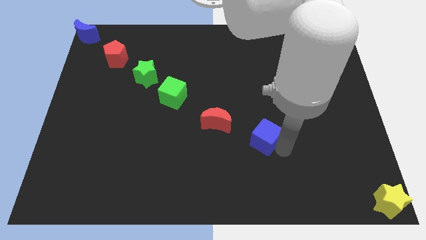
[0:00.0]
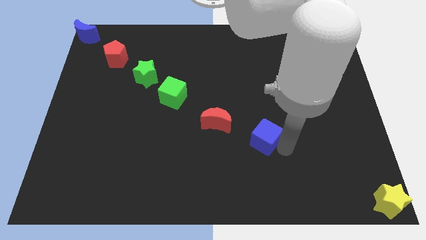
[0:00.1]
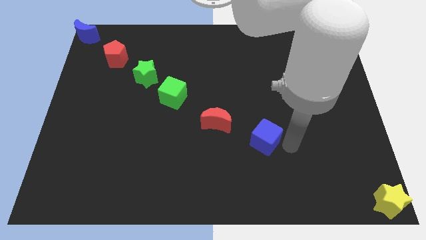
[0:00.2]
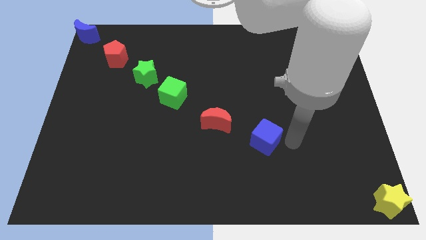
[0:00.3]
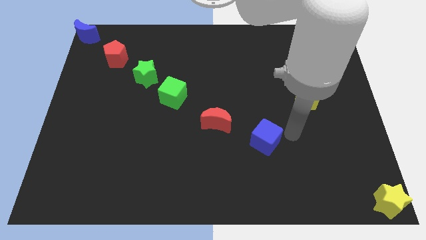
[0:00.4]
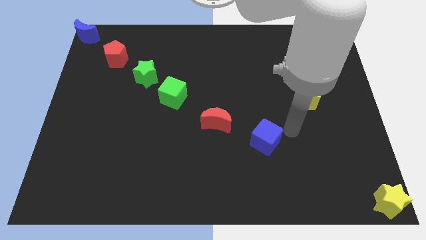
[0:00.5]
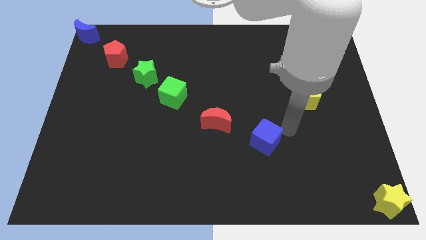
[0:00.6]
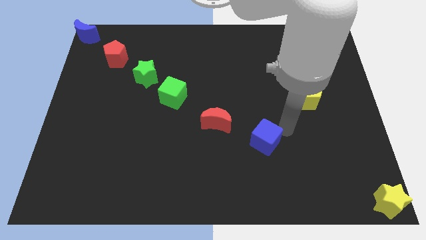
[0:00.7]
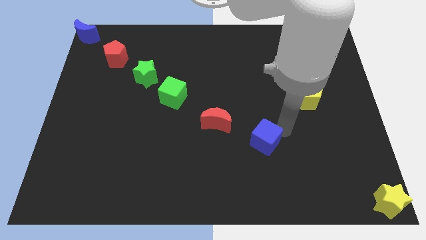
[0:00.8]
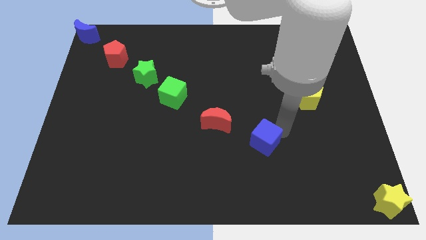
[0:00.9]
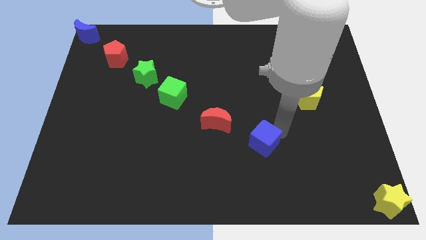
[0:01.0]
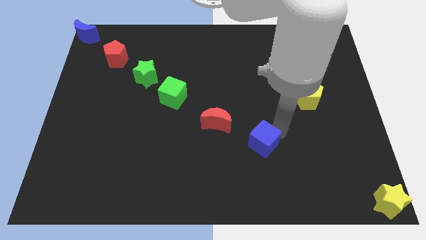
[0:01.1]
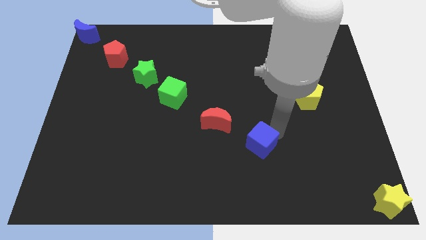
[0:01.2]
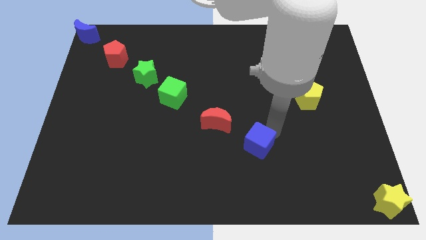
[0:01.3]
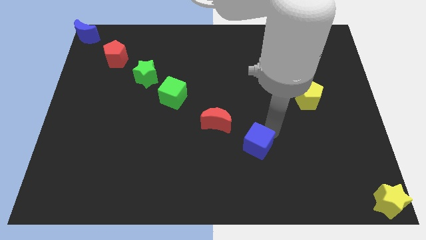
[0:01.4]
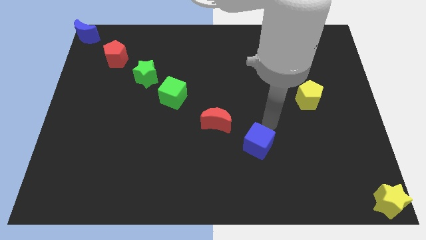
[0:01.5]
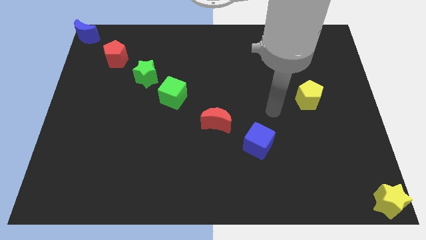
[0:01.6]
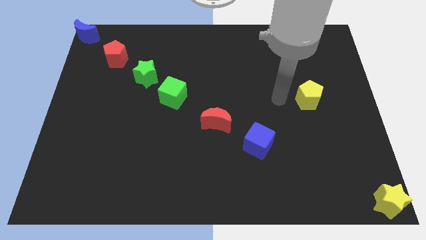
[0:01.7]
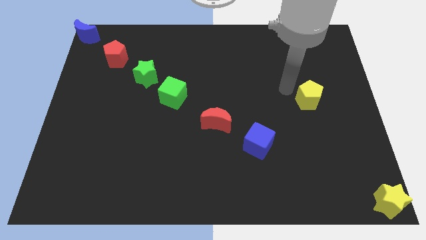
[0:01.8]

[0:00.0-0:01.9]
place blue cube exact diagonally to the red crescent

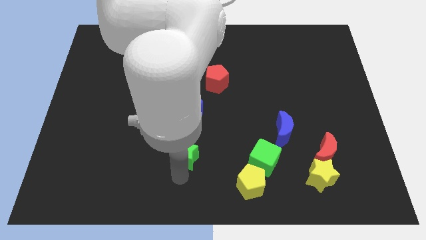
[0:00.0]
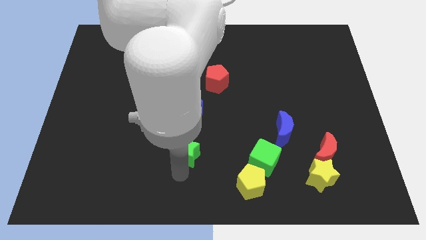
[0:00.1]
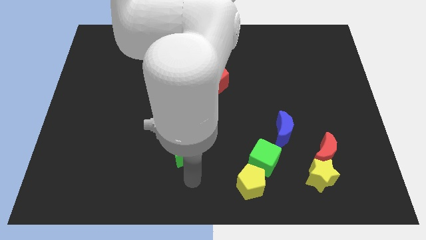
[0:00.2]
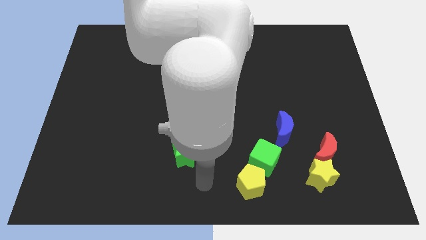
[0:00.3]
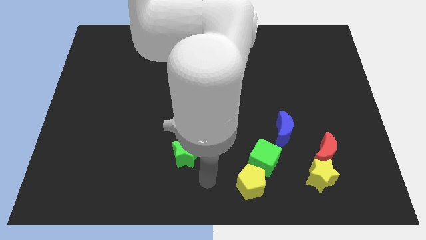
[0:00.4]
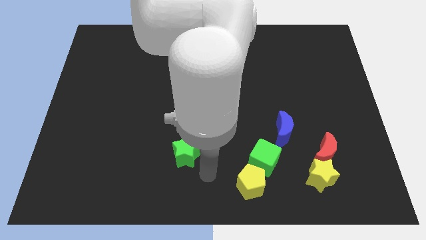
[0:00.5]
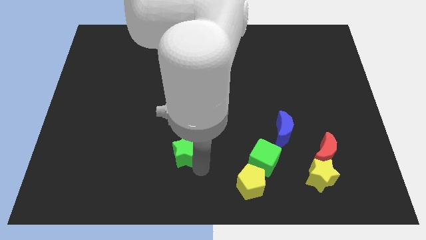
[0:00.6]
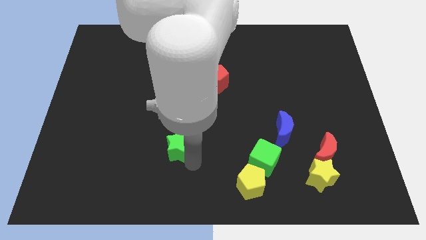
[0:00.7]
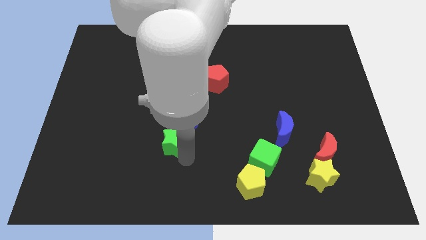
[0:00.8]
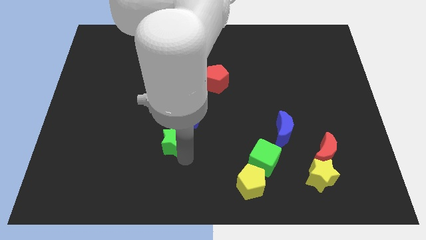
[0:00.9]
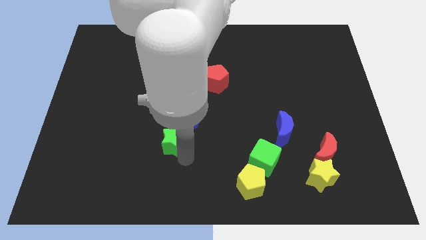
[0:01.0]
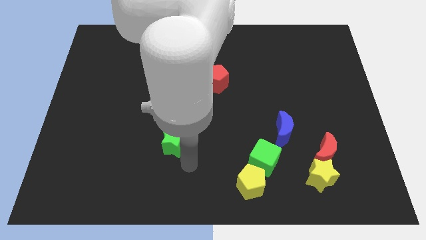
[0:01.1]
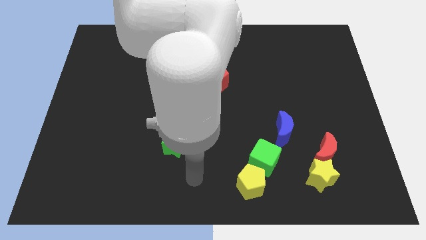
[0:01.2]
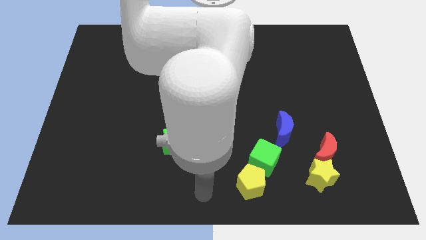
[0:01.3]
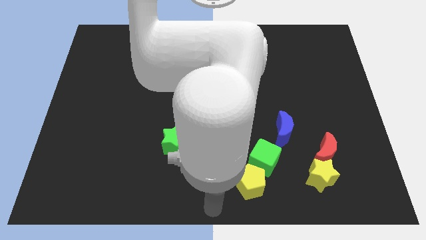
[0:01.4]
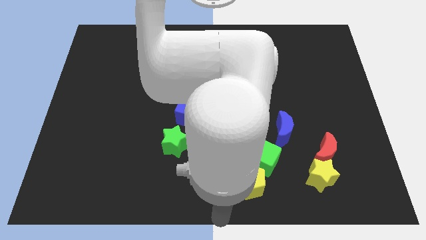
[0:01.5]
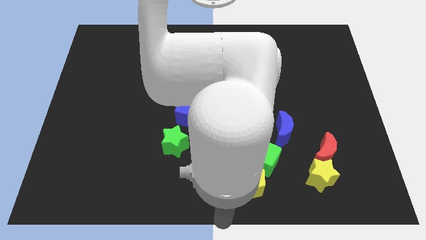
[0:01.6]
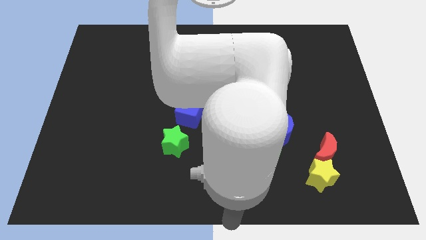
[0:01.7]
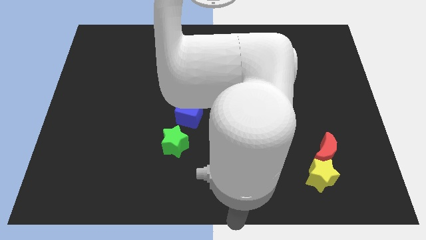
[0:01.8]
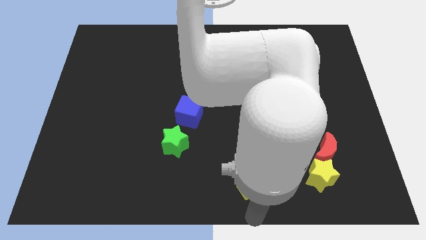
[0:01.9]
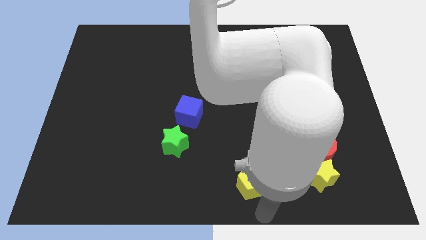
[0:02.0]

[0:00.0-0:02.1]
move the green star to the bottom side of the blue cube

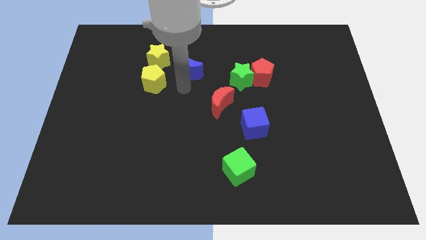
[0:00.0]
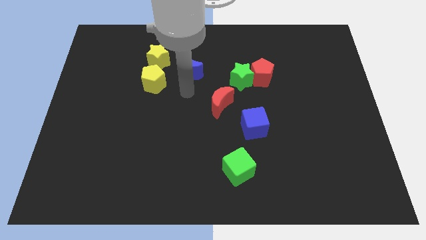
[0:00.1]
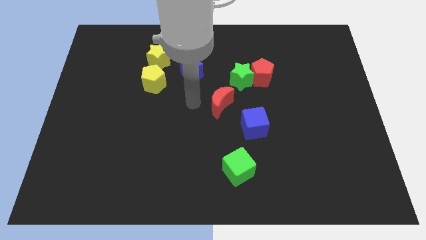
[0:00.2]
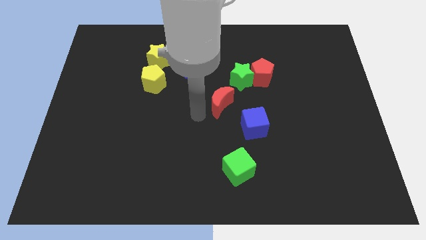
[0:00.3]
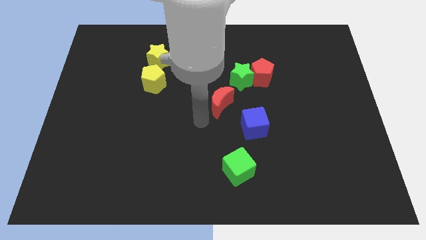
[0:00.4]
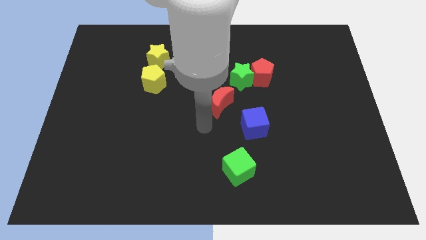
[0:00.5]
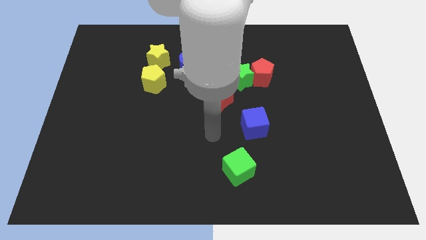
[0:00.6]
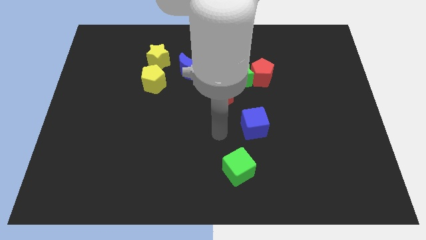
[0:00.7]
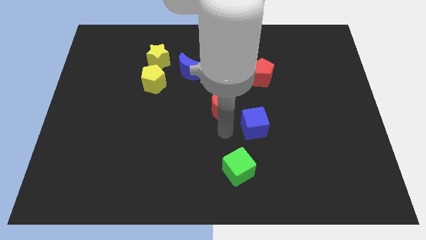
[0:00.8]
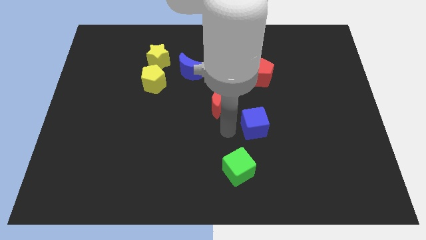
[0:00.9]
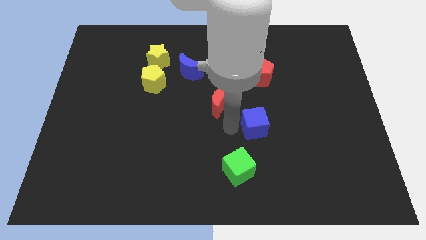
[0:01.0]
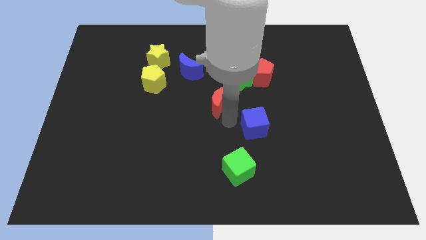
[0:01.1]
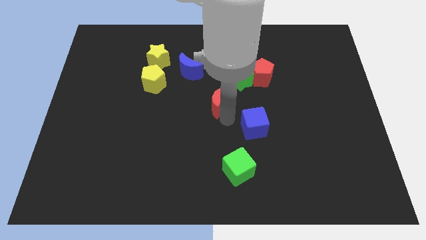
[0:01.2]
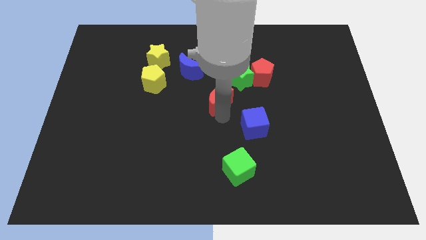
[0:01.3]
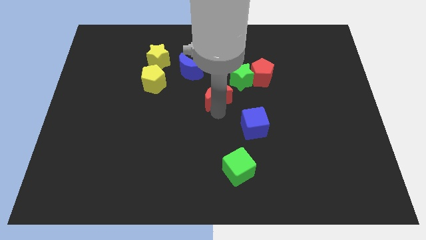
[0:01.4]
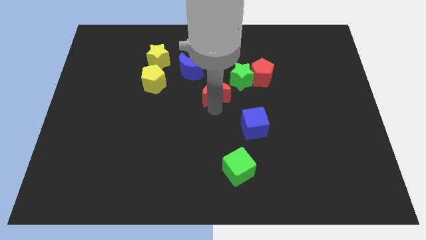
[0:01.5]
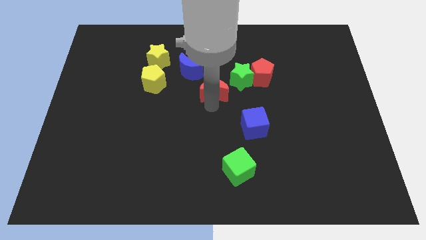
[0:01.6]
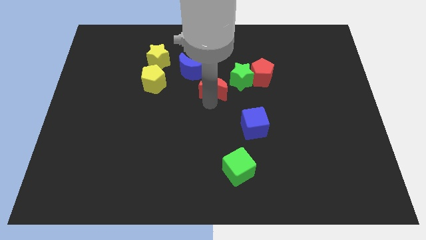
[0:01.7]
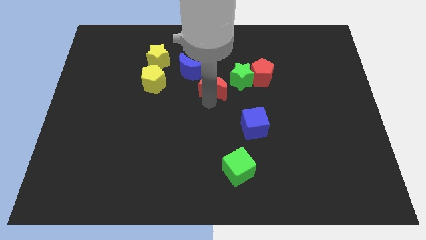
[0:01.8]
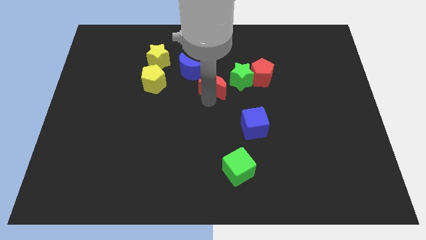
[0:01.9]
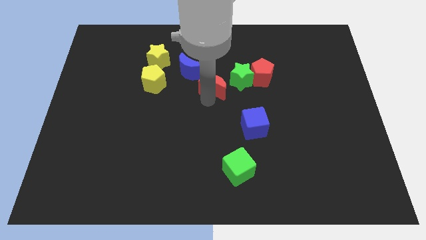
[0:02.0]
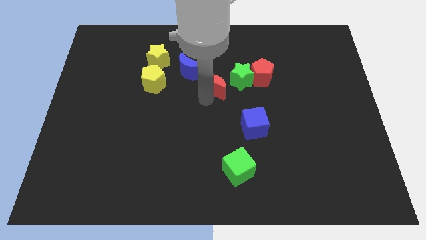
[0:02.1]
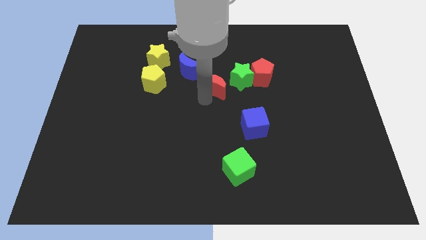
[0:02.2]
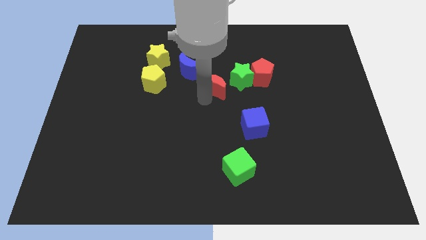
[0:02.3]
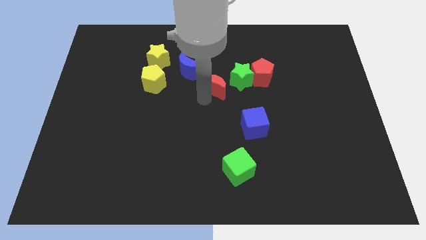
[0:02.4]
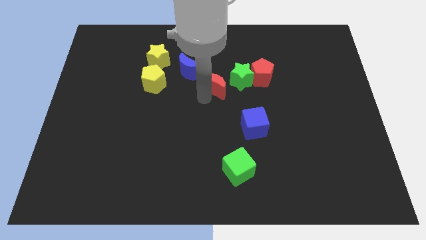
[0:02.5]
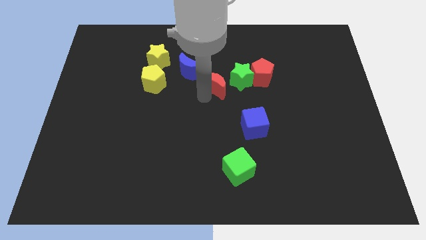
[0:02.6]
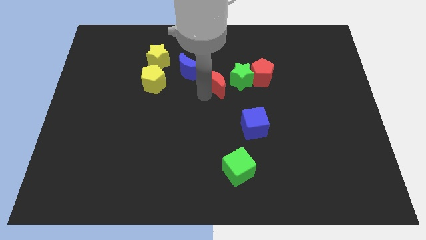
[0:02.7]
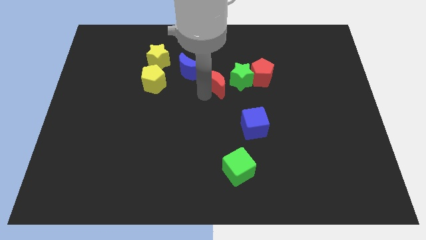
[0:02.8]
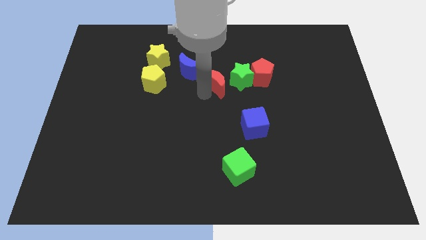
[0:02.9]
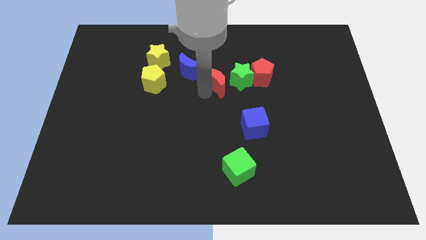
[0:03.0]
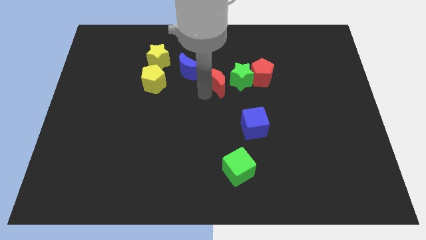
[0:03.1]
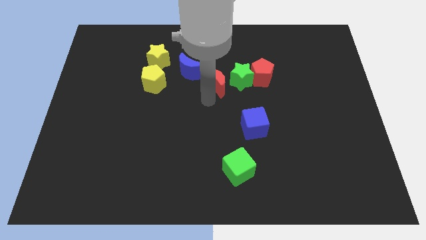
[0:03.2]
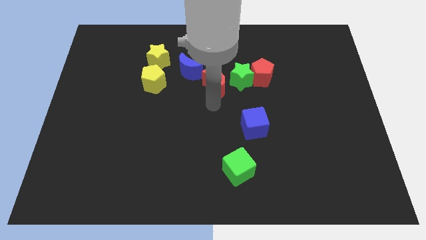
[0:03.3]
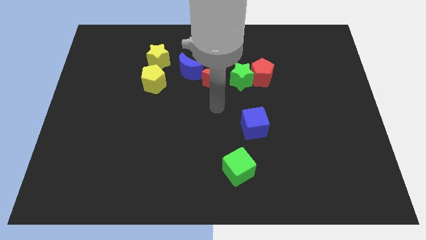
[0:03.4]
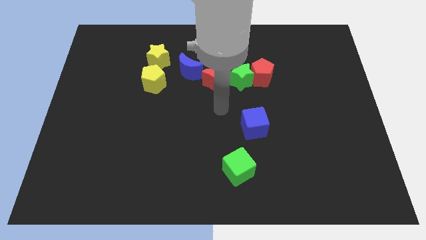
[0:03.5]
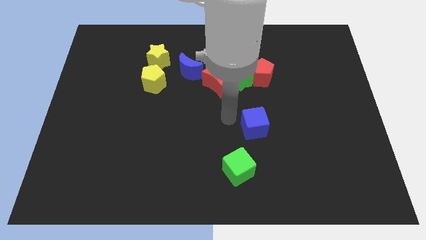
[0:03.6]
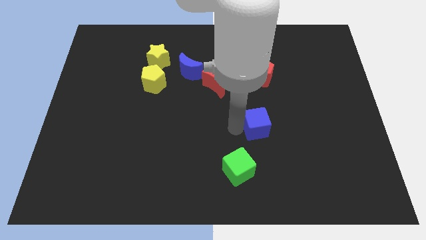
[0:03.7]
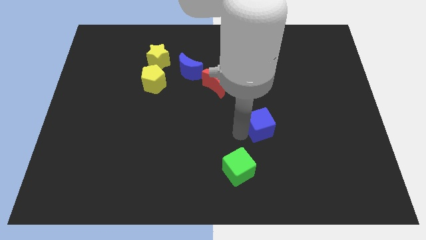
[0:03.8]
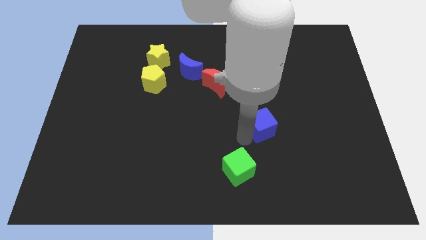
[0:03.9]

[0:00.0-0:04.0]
push the blue cube slightly towards the right side

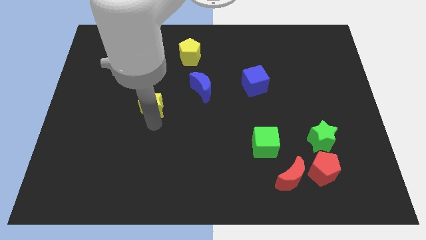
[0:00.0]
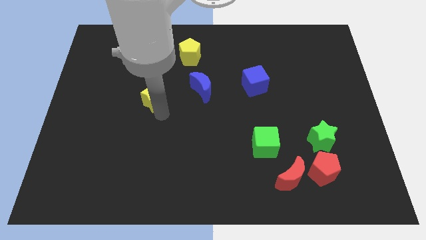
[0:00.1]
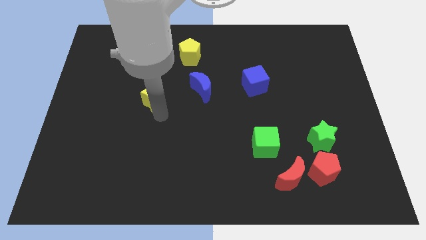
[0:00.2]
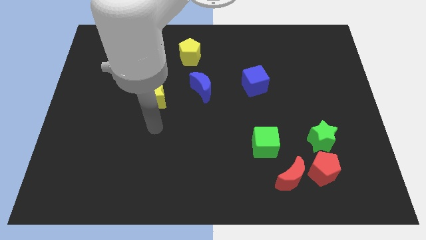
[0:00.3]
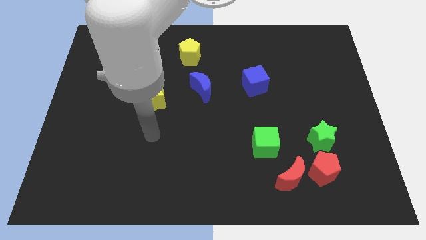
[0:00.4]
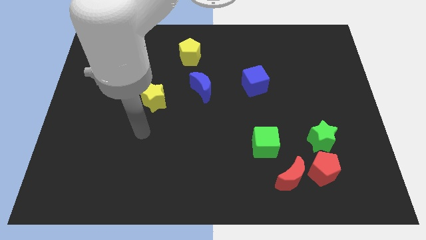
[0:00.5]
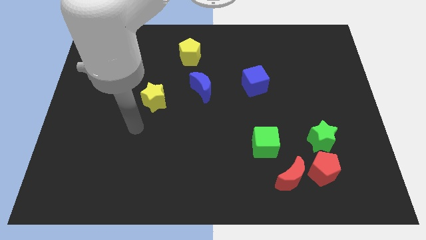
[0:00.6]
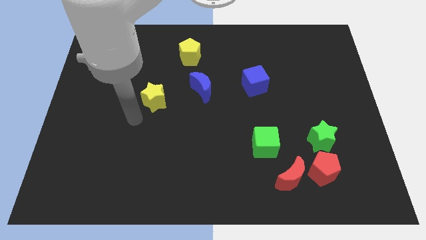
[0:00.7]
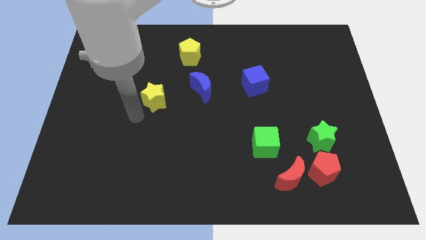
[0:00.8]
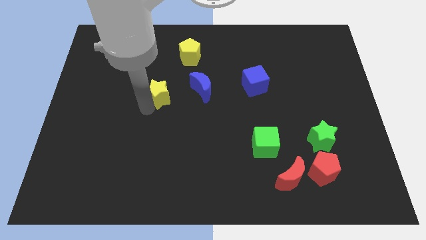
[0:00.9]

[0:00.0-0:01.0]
place the yellow star to the left of the blue moon

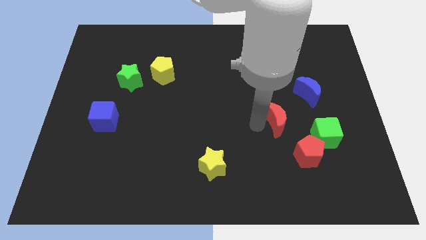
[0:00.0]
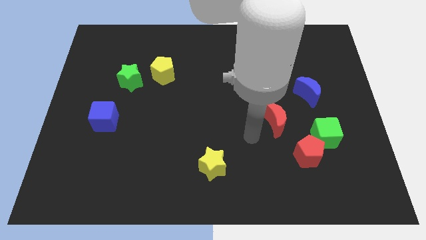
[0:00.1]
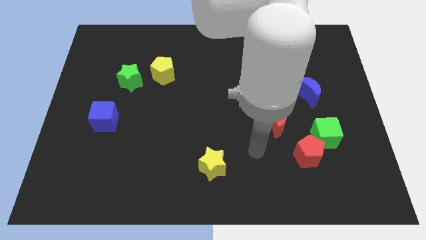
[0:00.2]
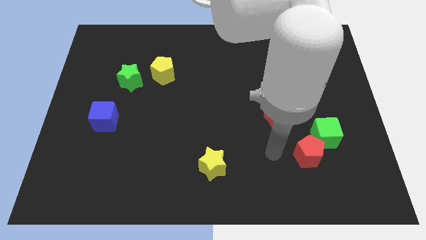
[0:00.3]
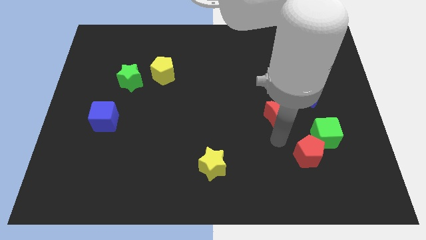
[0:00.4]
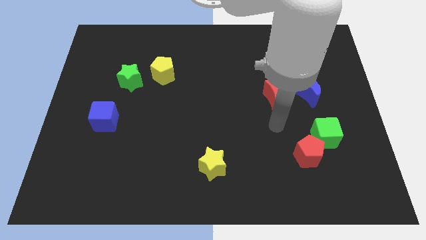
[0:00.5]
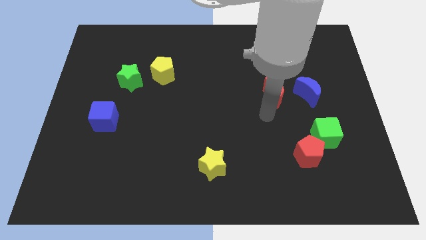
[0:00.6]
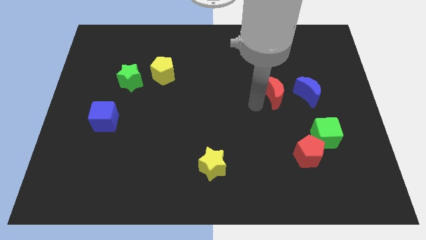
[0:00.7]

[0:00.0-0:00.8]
push the reed moon to the left of the blue moon
